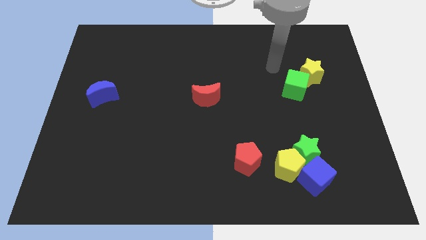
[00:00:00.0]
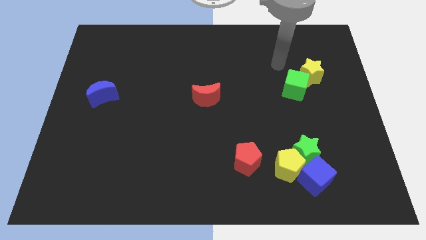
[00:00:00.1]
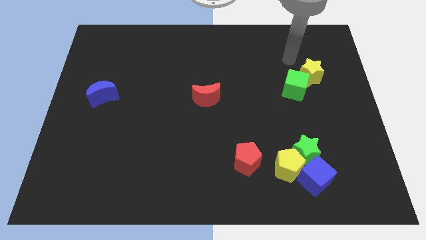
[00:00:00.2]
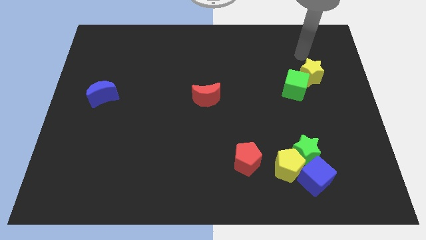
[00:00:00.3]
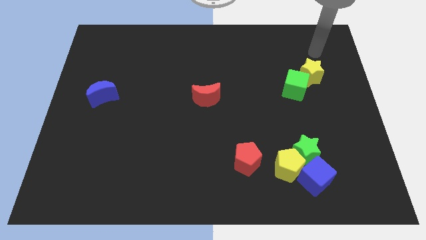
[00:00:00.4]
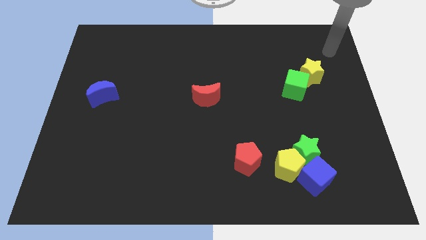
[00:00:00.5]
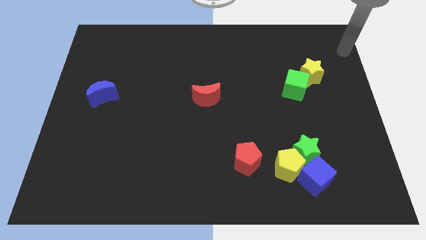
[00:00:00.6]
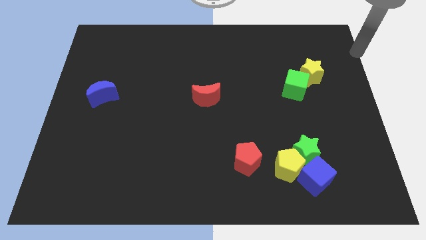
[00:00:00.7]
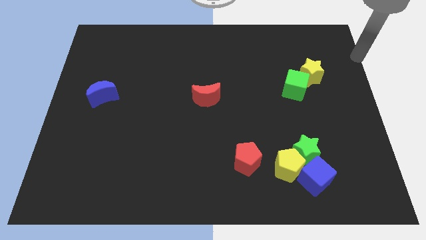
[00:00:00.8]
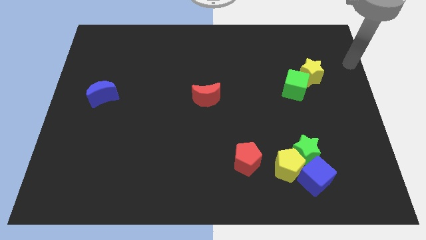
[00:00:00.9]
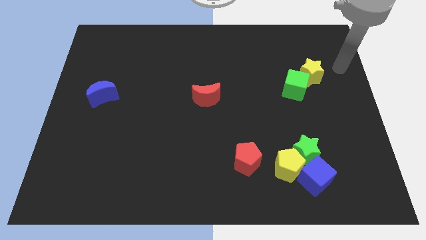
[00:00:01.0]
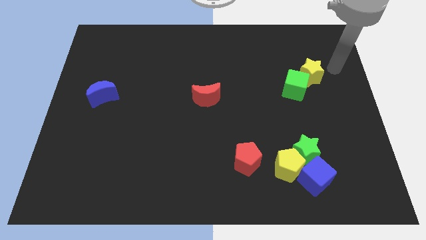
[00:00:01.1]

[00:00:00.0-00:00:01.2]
place your arm towards the right side of yellow star

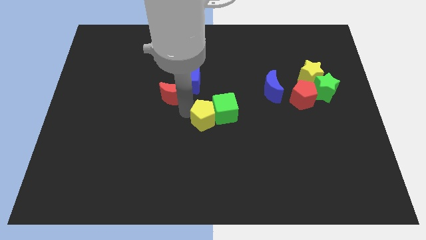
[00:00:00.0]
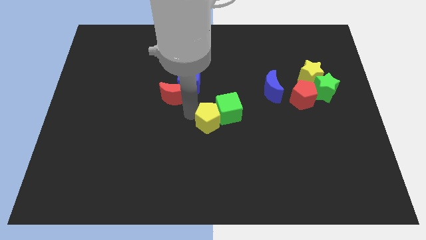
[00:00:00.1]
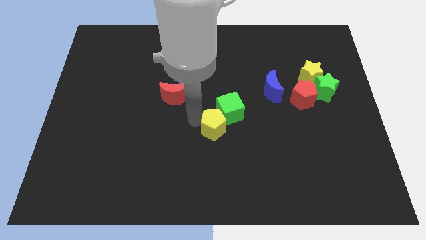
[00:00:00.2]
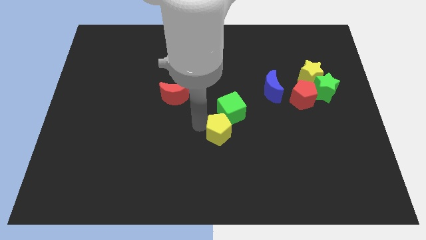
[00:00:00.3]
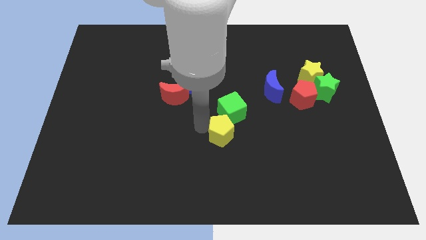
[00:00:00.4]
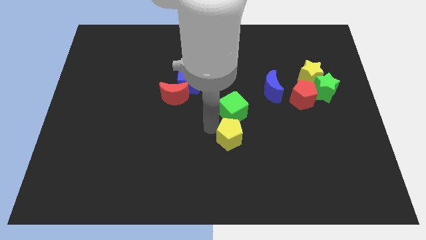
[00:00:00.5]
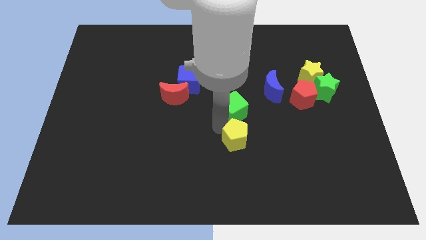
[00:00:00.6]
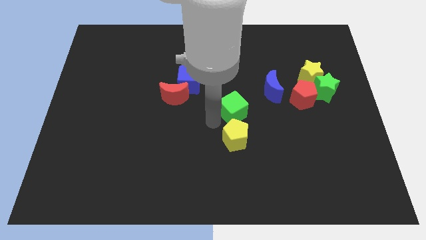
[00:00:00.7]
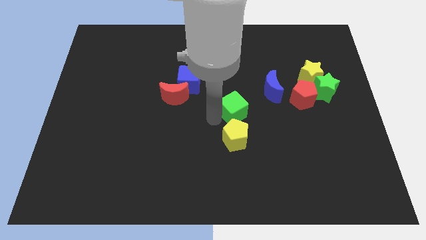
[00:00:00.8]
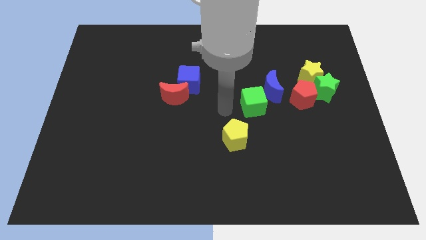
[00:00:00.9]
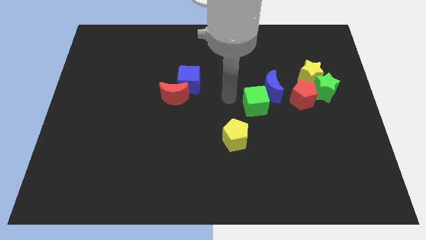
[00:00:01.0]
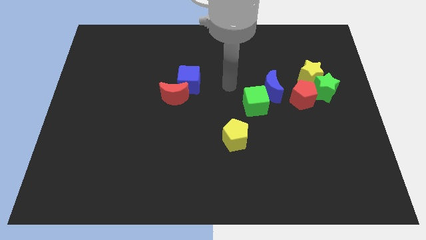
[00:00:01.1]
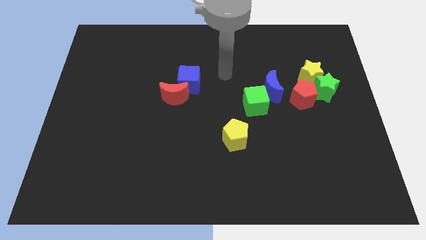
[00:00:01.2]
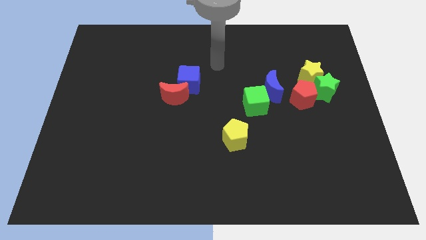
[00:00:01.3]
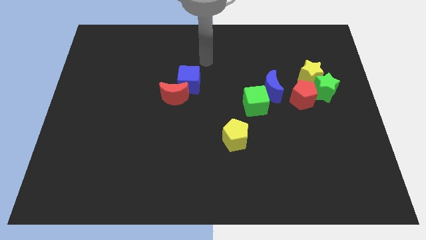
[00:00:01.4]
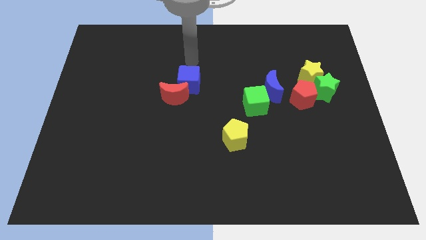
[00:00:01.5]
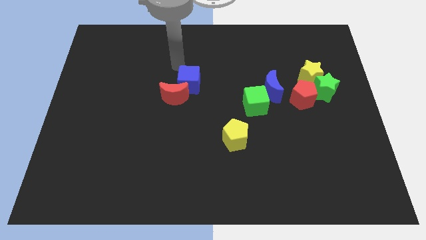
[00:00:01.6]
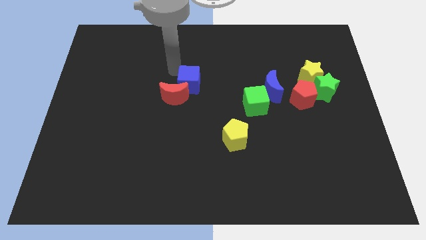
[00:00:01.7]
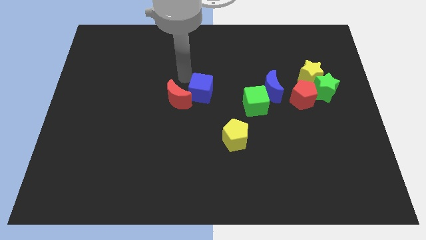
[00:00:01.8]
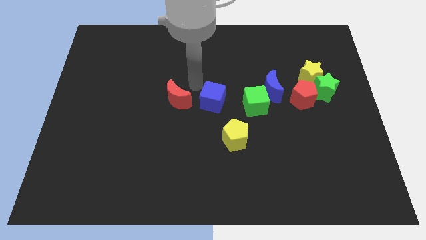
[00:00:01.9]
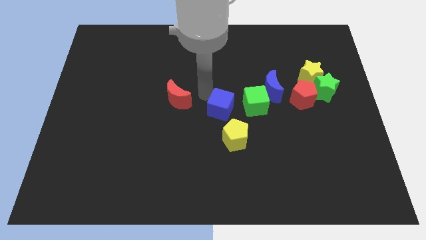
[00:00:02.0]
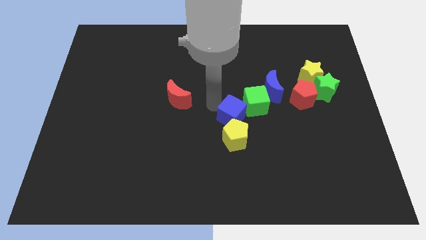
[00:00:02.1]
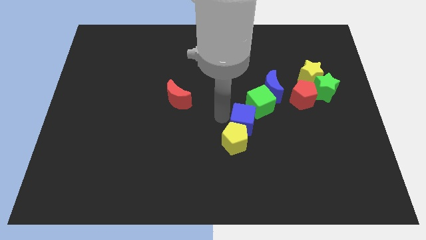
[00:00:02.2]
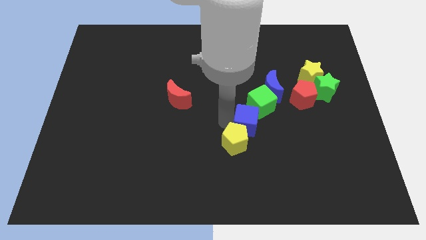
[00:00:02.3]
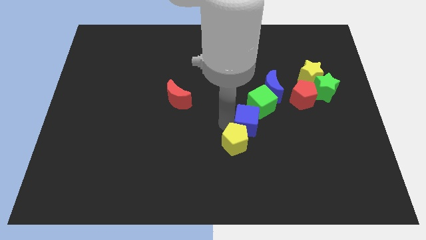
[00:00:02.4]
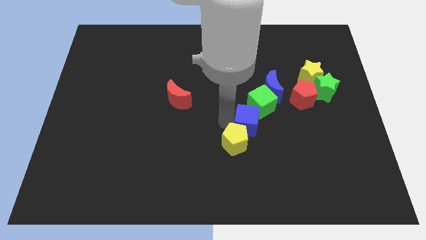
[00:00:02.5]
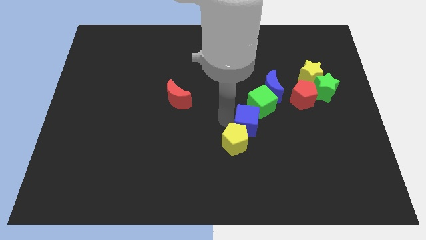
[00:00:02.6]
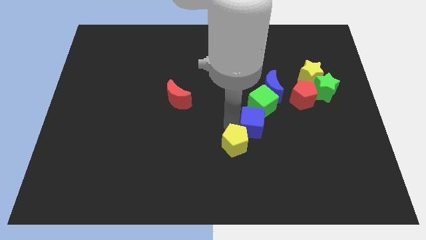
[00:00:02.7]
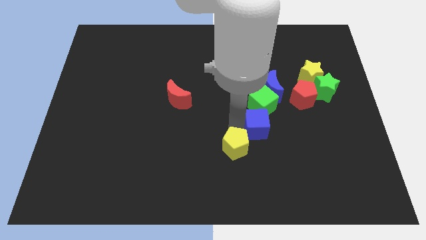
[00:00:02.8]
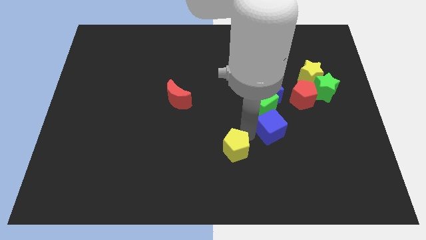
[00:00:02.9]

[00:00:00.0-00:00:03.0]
push the blue cube slightly downwards

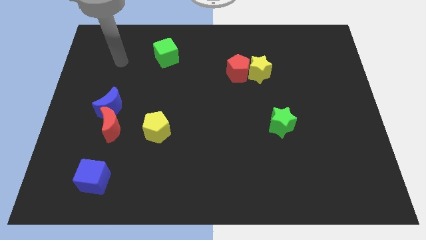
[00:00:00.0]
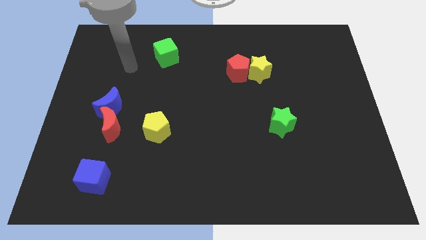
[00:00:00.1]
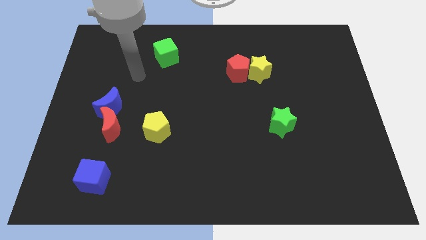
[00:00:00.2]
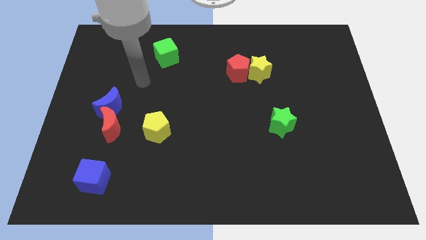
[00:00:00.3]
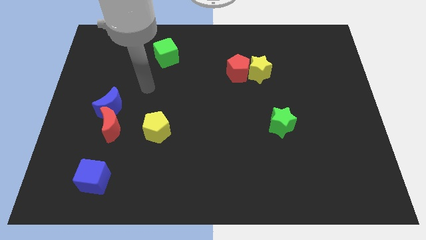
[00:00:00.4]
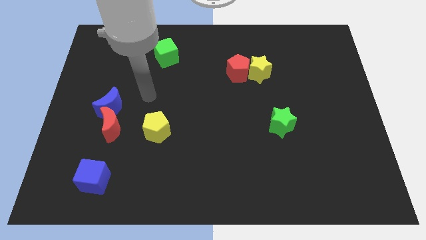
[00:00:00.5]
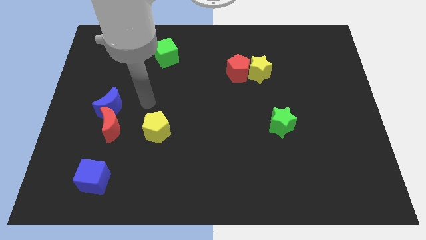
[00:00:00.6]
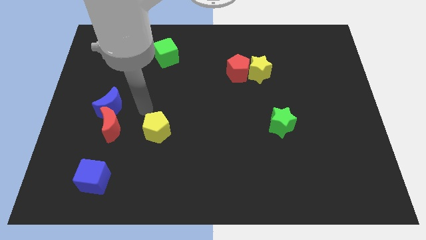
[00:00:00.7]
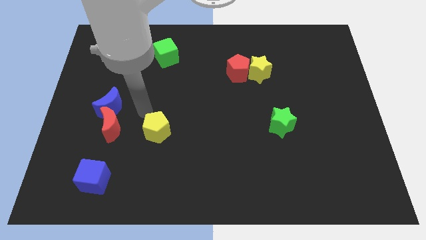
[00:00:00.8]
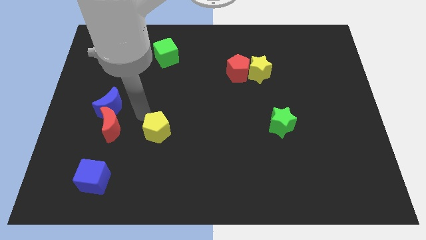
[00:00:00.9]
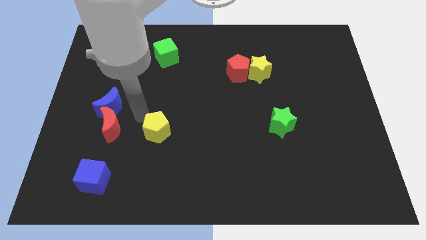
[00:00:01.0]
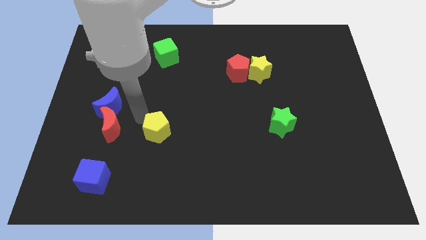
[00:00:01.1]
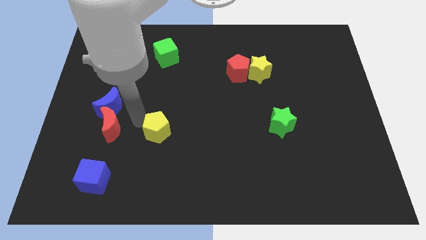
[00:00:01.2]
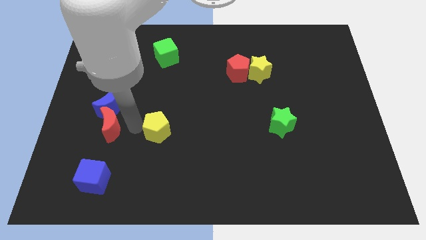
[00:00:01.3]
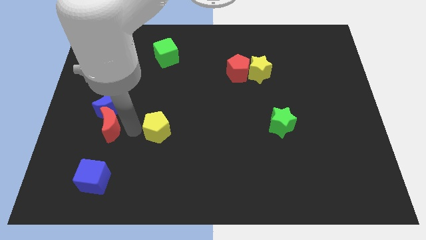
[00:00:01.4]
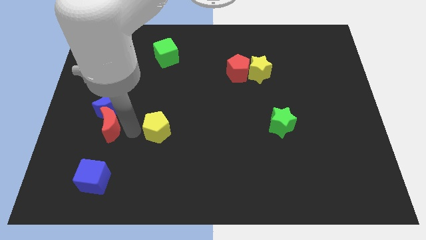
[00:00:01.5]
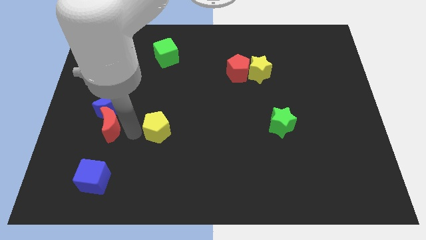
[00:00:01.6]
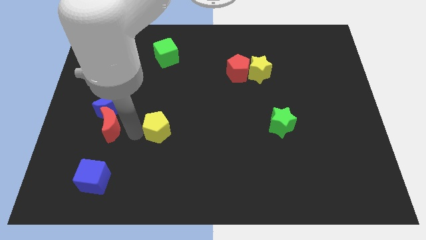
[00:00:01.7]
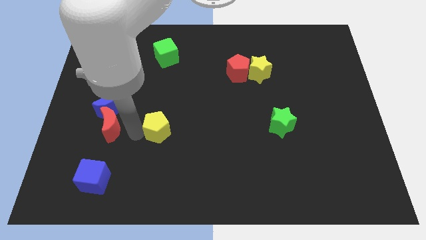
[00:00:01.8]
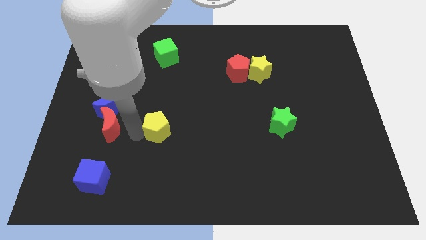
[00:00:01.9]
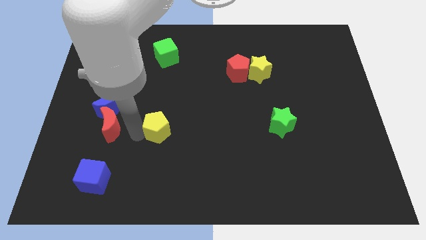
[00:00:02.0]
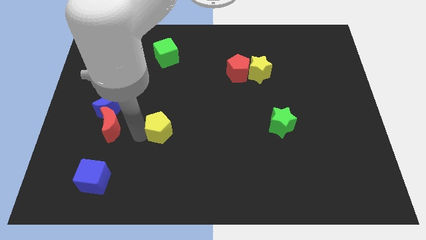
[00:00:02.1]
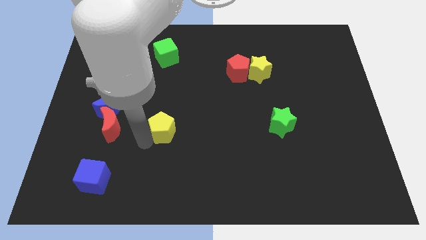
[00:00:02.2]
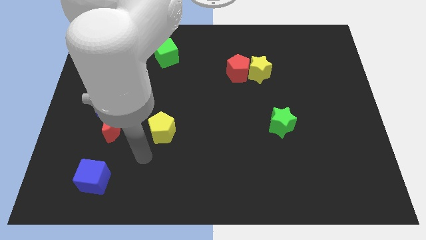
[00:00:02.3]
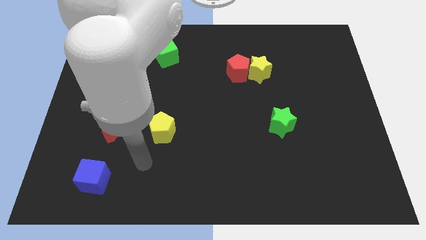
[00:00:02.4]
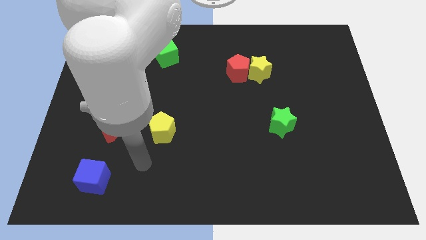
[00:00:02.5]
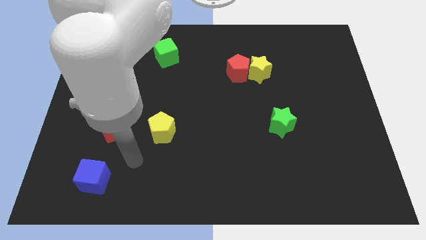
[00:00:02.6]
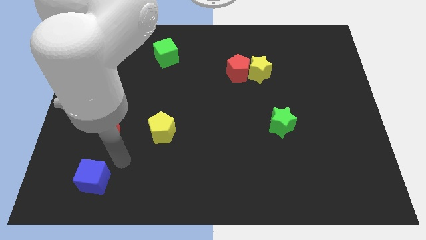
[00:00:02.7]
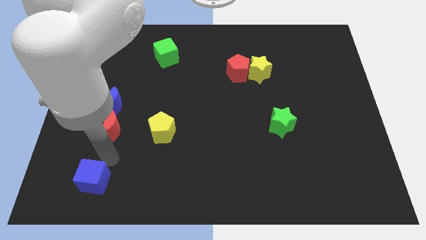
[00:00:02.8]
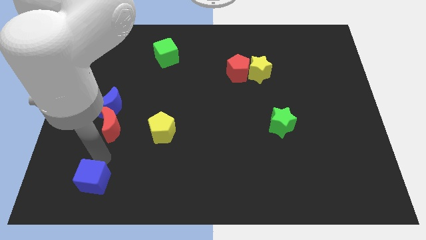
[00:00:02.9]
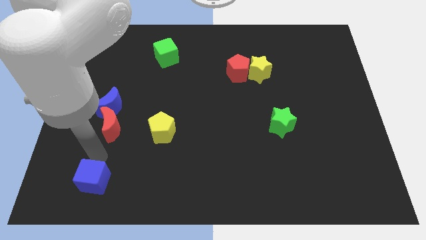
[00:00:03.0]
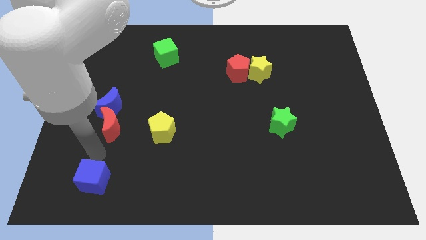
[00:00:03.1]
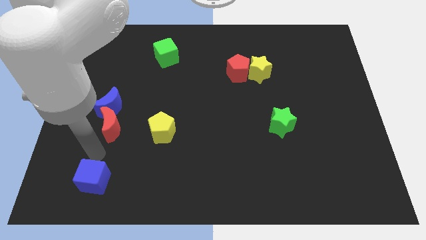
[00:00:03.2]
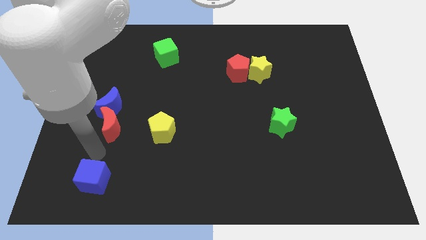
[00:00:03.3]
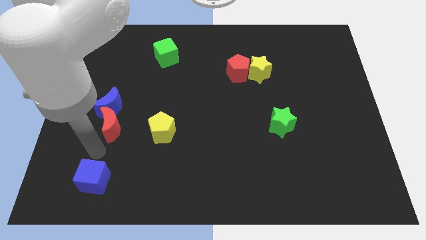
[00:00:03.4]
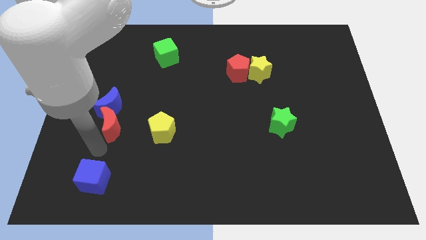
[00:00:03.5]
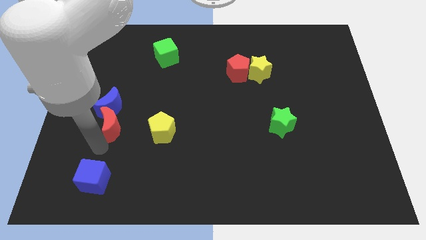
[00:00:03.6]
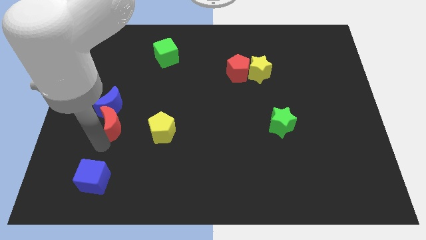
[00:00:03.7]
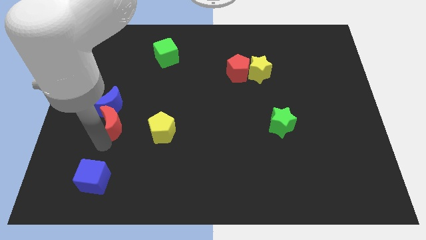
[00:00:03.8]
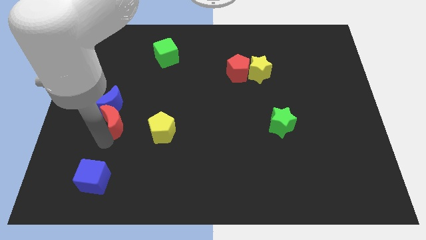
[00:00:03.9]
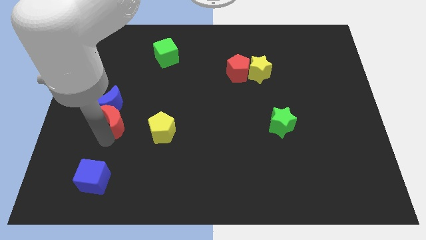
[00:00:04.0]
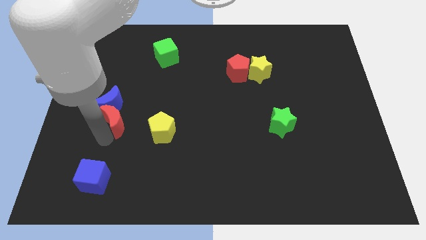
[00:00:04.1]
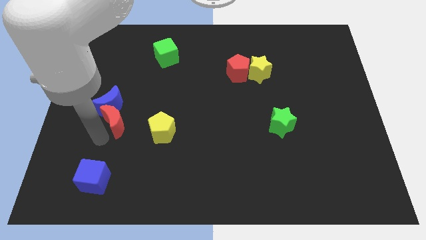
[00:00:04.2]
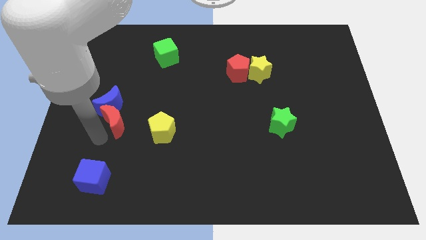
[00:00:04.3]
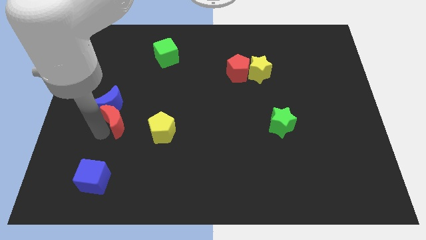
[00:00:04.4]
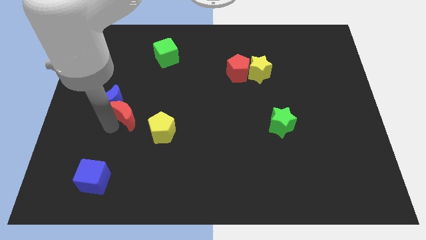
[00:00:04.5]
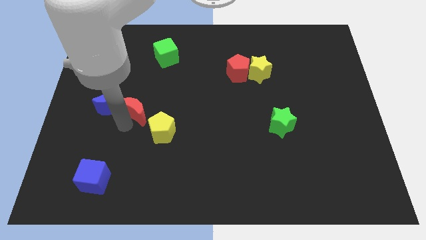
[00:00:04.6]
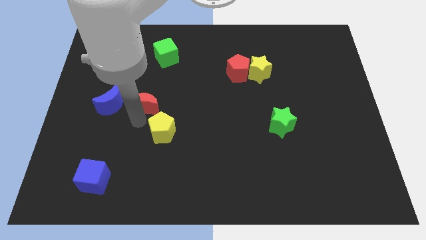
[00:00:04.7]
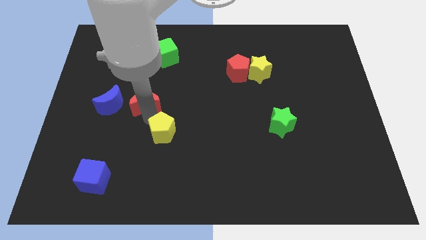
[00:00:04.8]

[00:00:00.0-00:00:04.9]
touch yellow and red blocks
